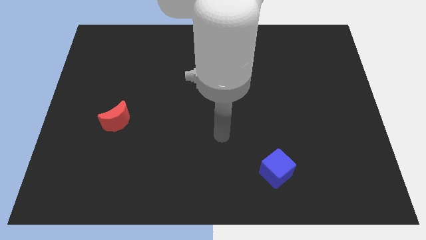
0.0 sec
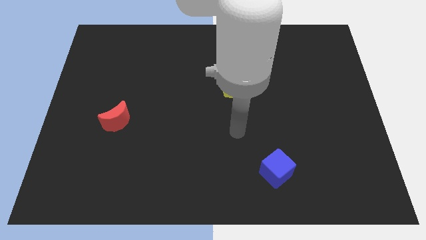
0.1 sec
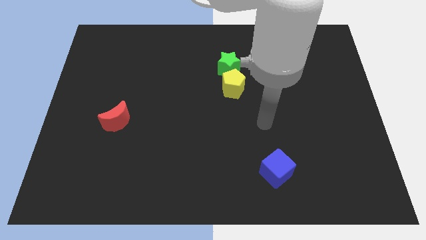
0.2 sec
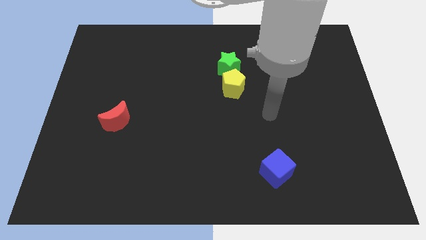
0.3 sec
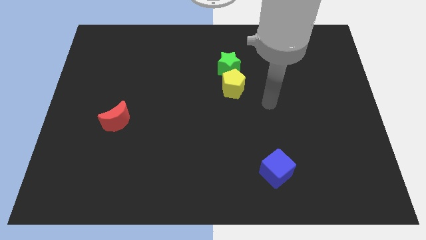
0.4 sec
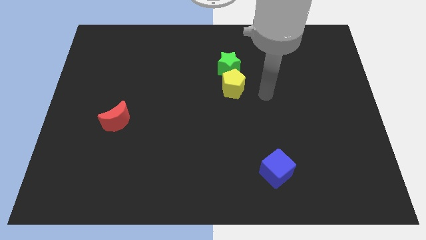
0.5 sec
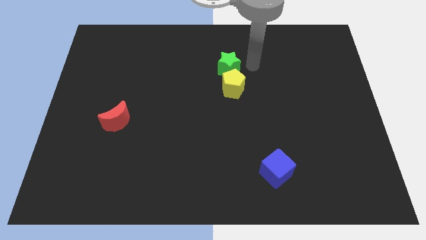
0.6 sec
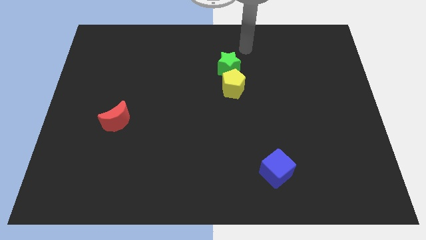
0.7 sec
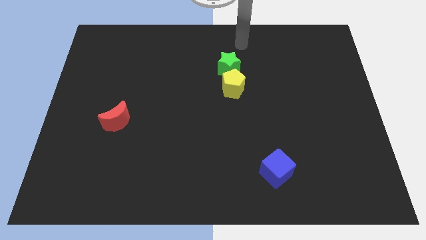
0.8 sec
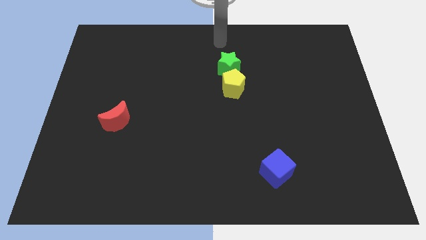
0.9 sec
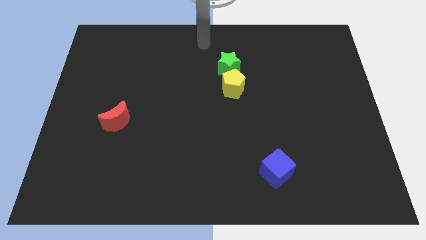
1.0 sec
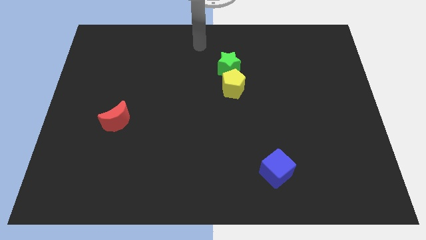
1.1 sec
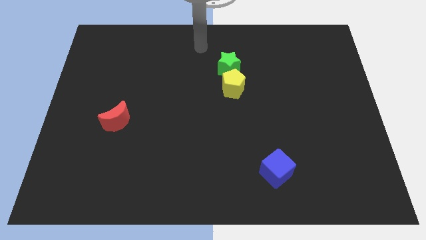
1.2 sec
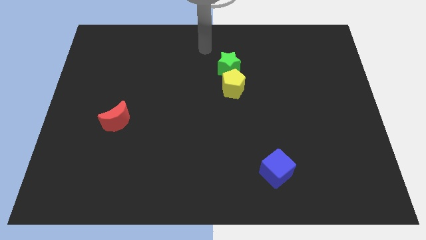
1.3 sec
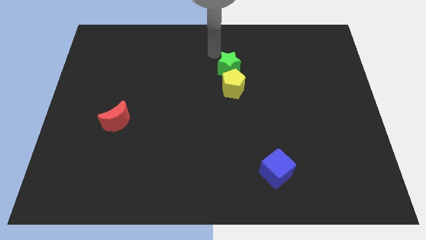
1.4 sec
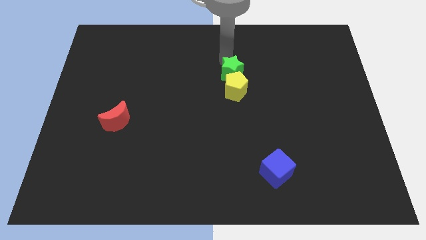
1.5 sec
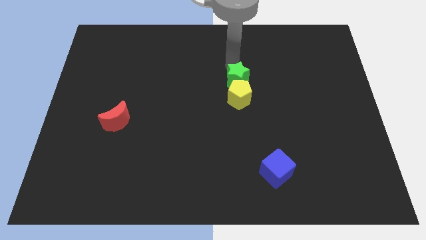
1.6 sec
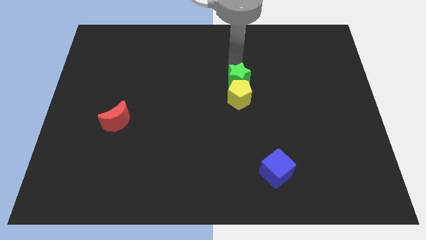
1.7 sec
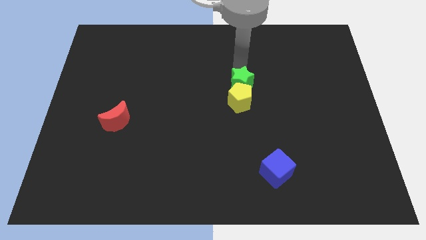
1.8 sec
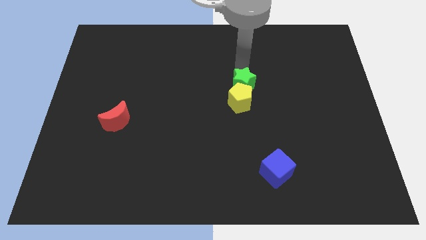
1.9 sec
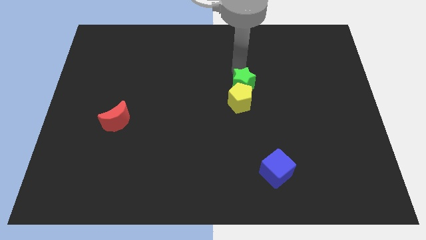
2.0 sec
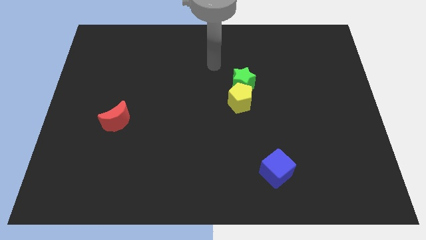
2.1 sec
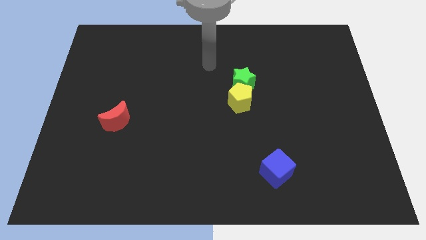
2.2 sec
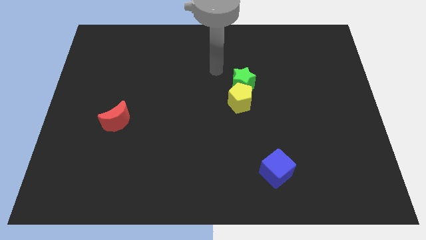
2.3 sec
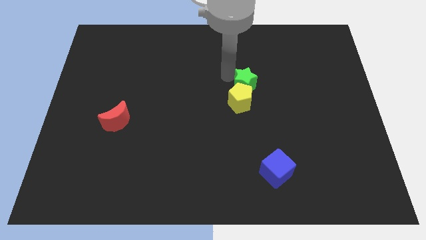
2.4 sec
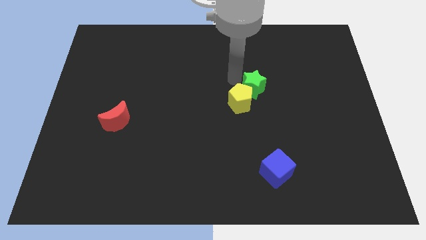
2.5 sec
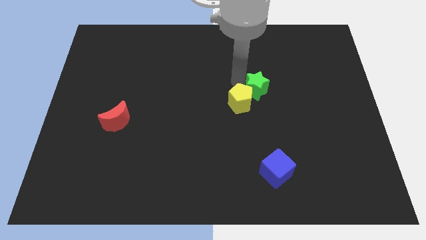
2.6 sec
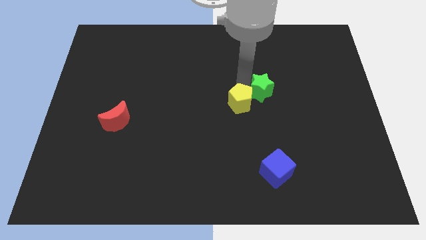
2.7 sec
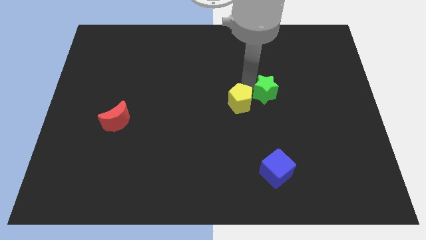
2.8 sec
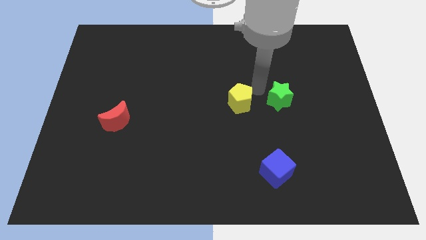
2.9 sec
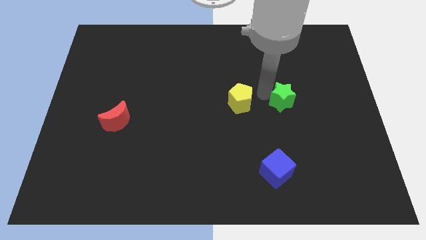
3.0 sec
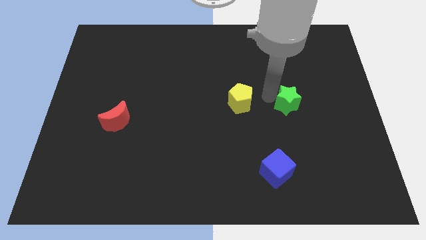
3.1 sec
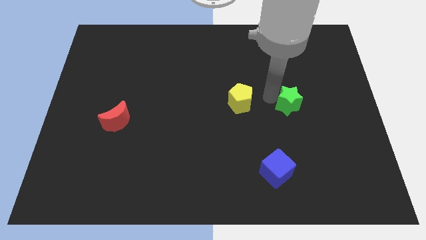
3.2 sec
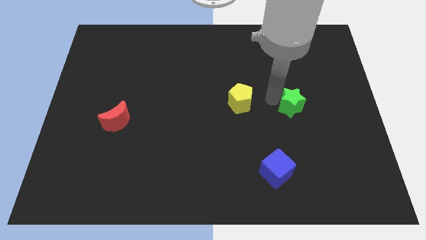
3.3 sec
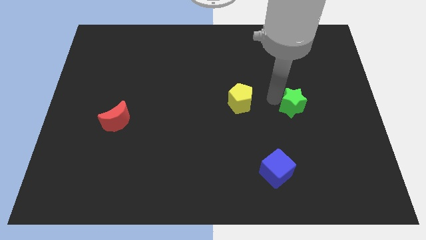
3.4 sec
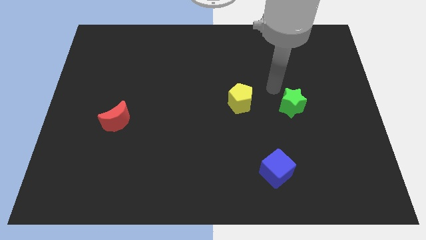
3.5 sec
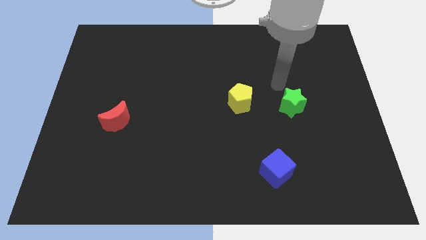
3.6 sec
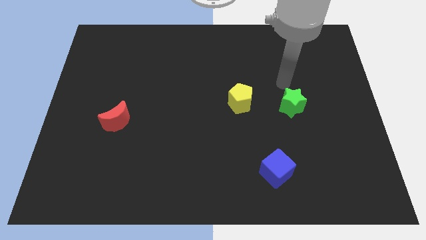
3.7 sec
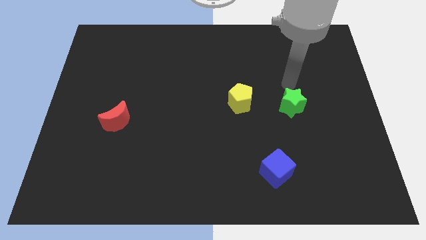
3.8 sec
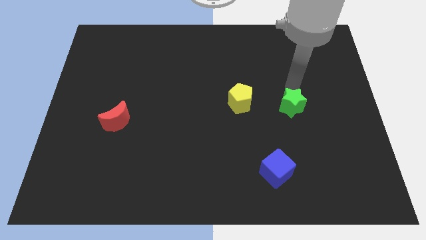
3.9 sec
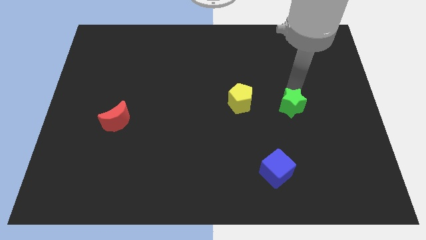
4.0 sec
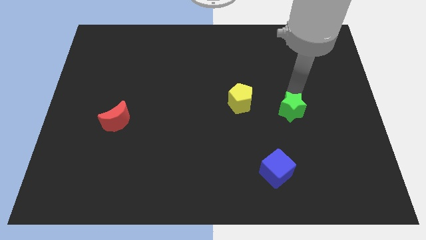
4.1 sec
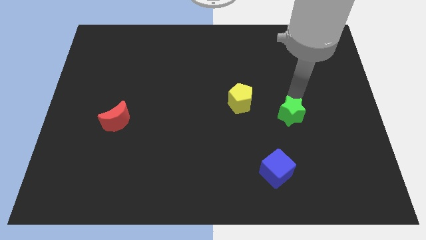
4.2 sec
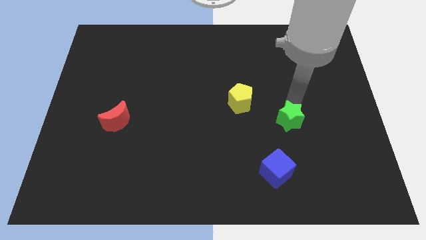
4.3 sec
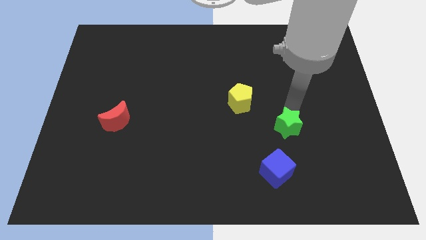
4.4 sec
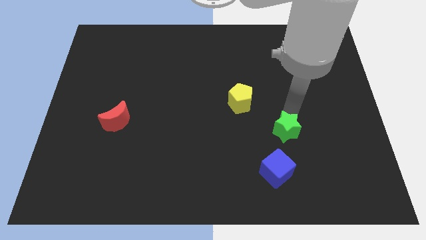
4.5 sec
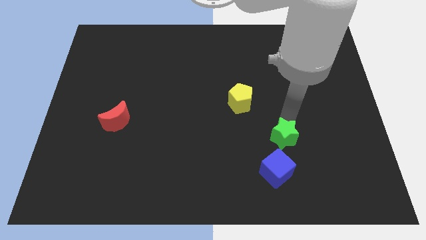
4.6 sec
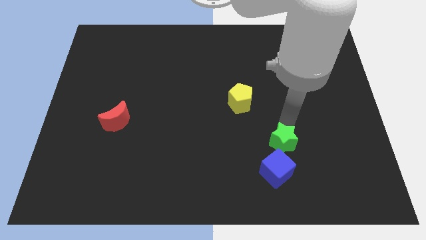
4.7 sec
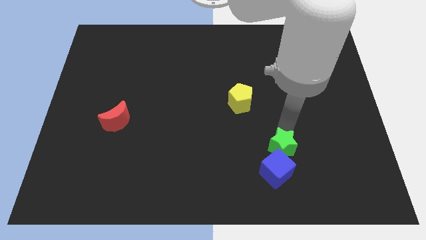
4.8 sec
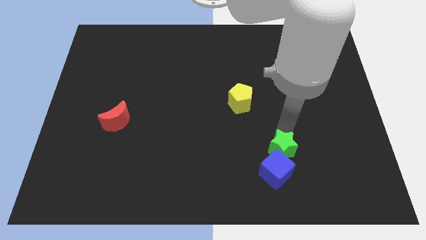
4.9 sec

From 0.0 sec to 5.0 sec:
put the green block next to the cube

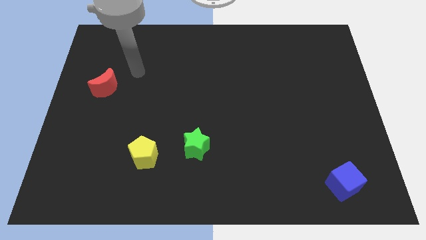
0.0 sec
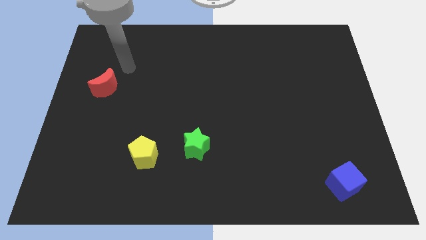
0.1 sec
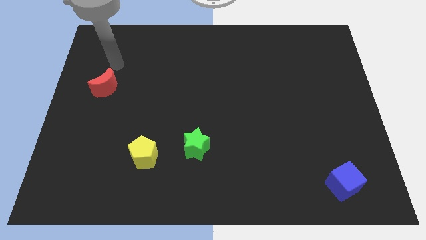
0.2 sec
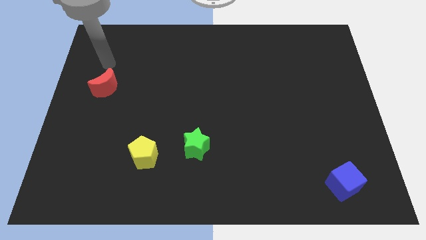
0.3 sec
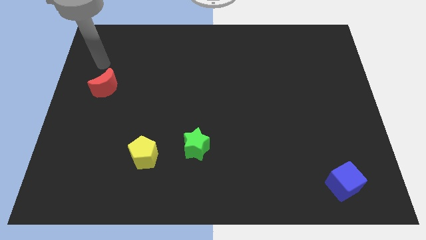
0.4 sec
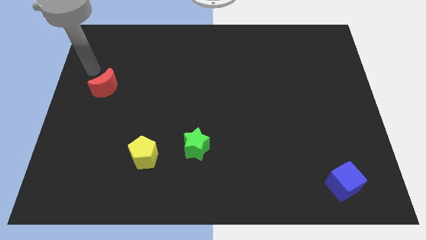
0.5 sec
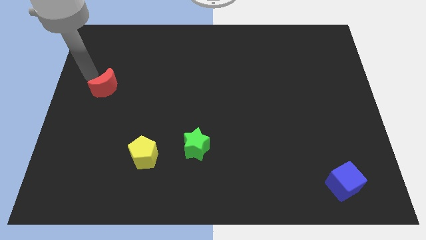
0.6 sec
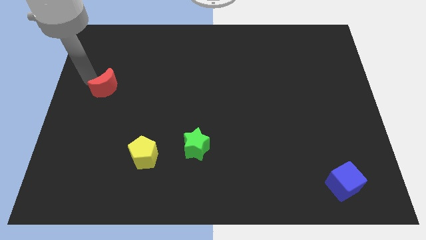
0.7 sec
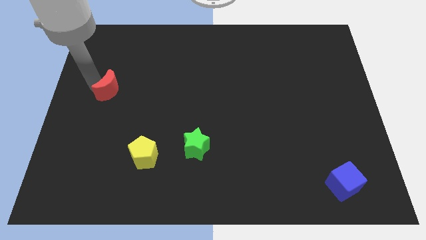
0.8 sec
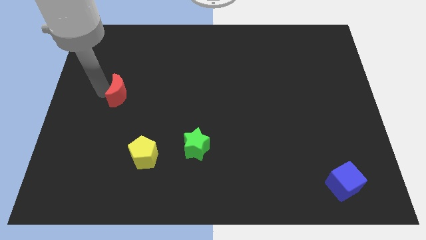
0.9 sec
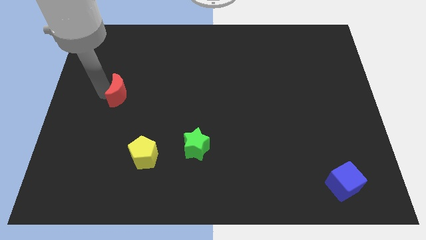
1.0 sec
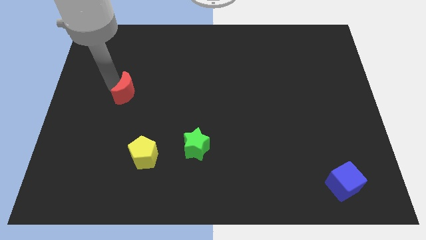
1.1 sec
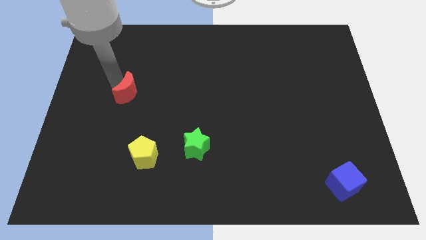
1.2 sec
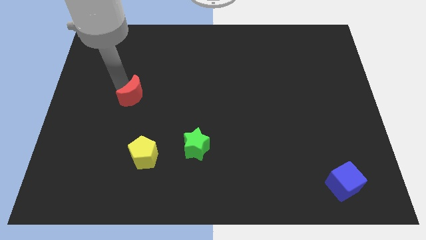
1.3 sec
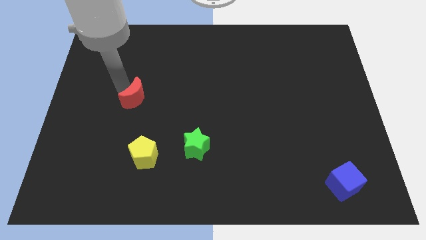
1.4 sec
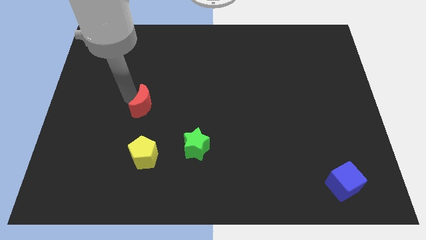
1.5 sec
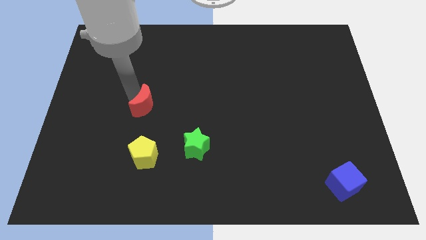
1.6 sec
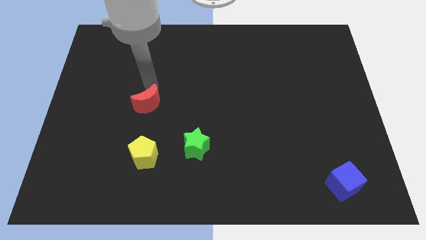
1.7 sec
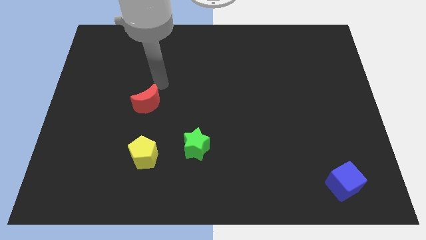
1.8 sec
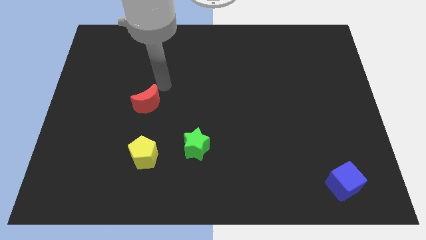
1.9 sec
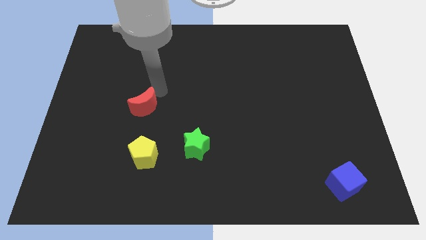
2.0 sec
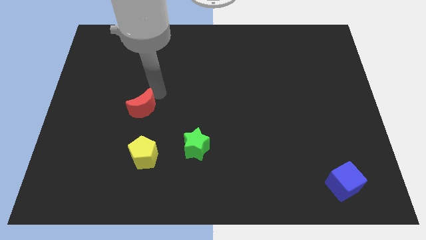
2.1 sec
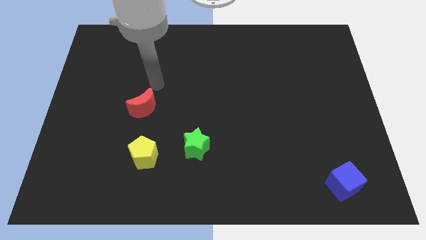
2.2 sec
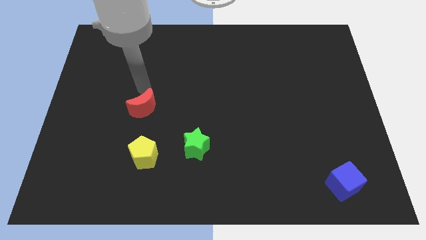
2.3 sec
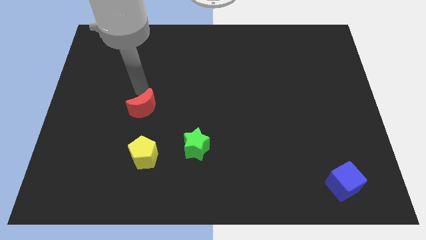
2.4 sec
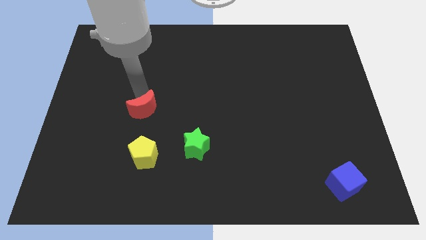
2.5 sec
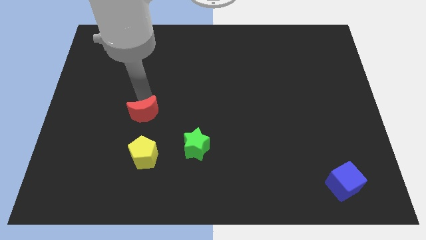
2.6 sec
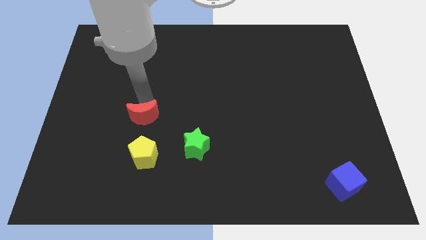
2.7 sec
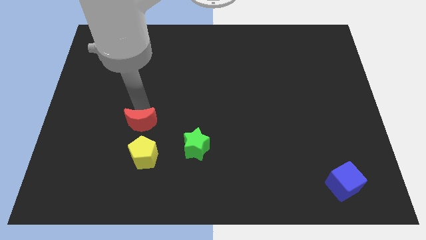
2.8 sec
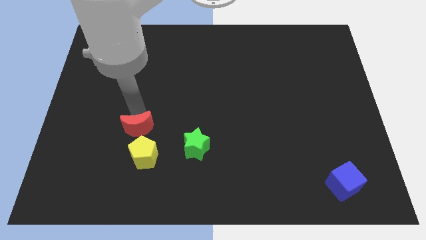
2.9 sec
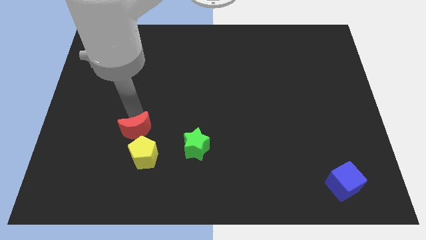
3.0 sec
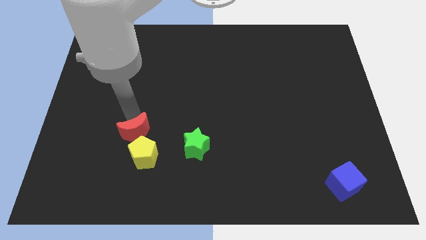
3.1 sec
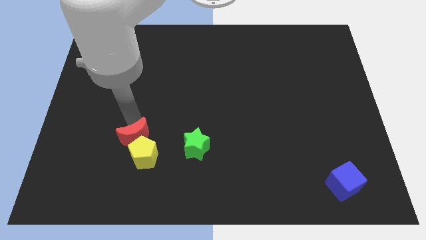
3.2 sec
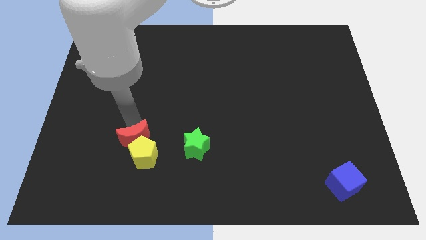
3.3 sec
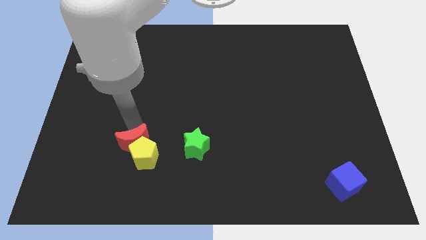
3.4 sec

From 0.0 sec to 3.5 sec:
slide the red moon close to the yellow pentagon
